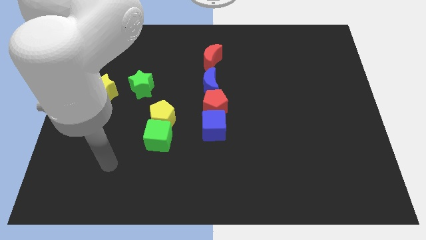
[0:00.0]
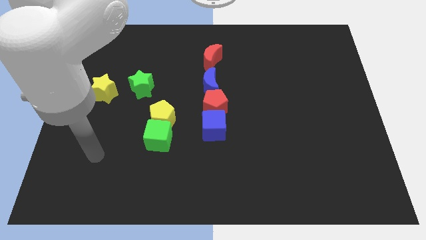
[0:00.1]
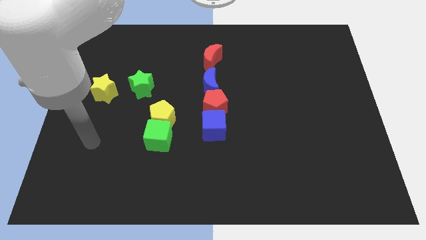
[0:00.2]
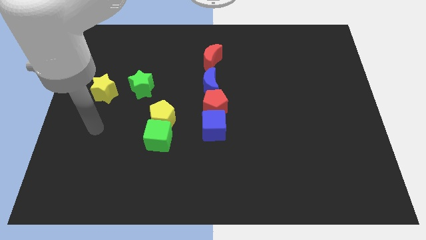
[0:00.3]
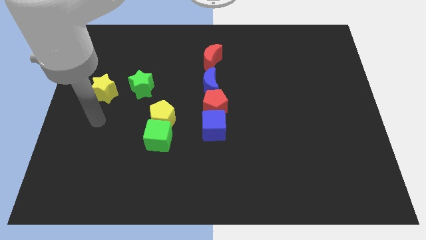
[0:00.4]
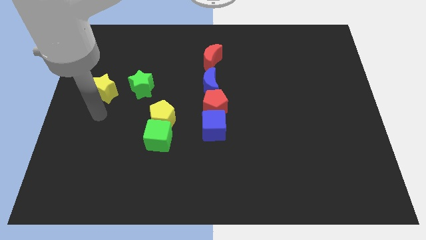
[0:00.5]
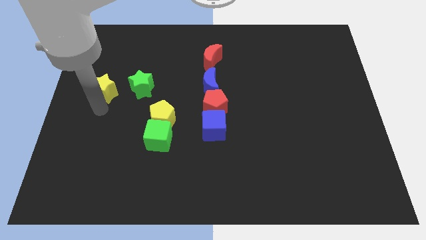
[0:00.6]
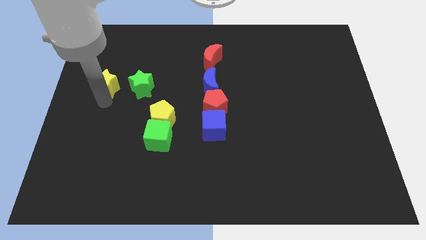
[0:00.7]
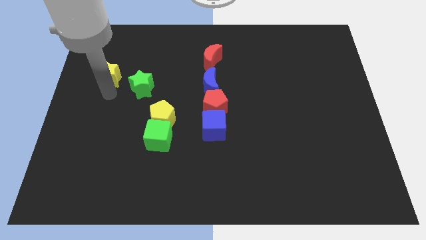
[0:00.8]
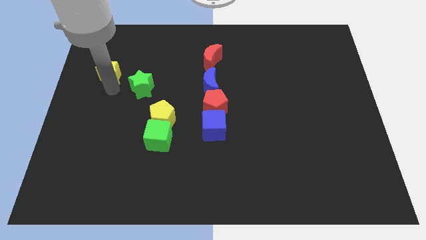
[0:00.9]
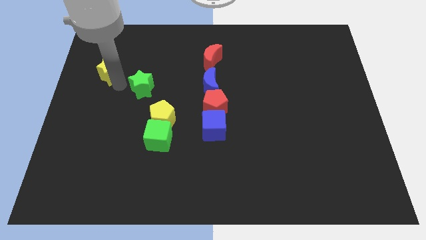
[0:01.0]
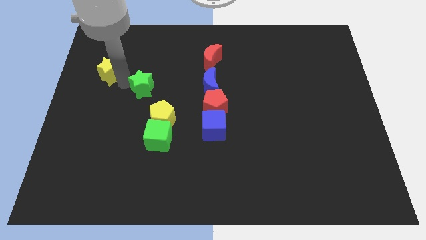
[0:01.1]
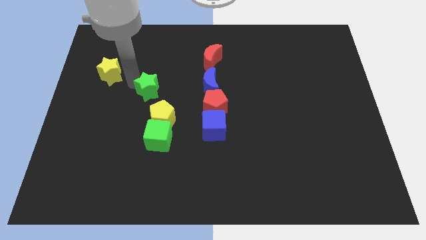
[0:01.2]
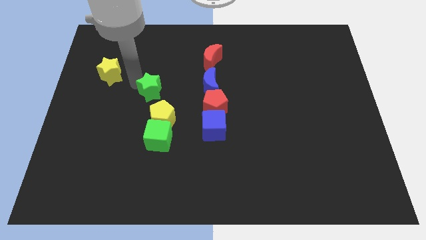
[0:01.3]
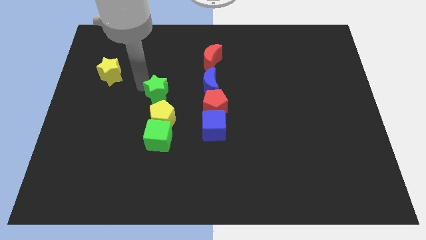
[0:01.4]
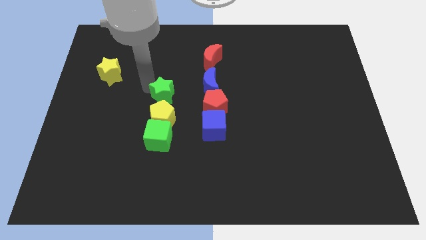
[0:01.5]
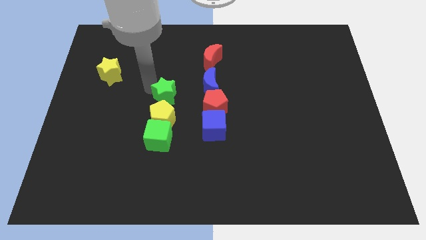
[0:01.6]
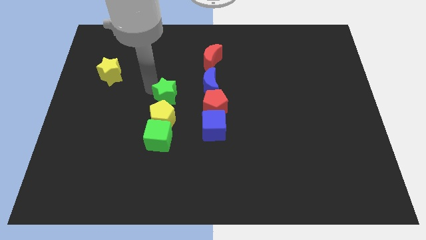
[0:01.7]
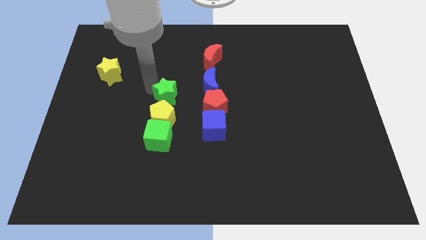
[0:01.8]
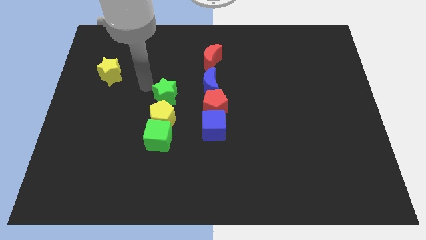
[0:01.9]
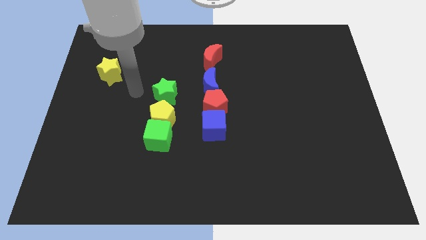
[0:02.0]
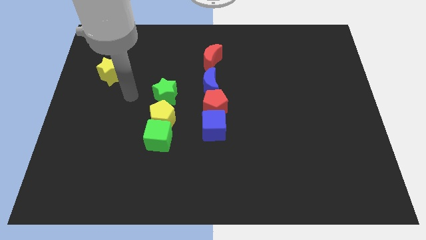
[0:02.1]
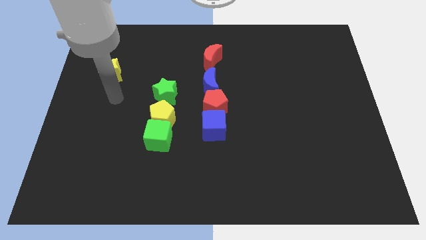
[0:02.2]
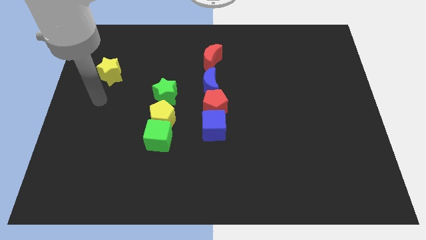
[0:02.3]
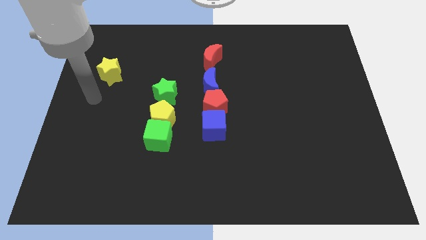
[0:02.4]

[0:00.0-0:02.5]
place the green star above the yellow pentagon

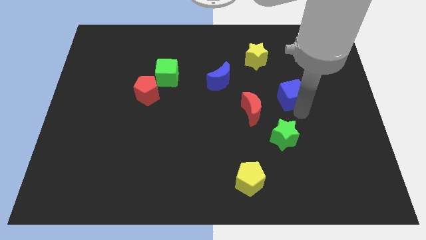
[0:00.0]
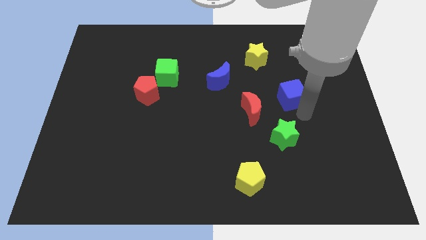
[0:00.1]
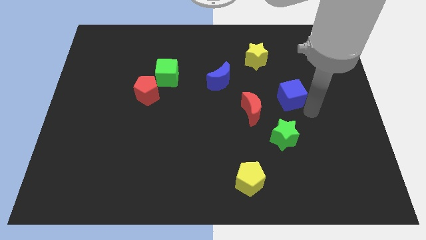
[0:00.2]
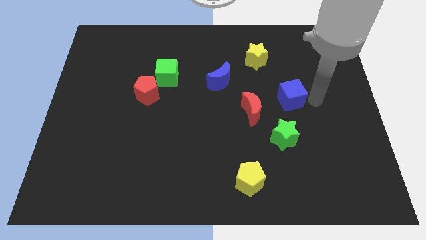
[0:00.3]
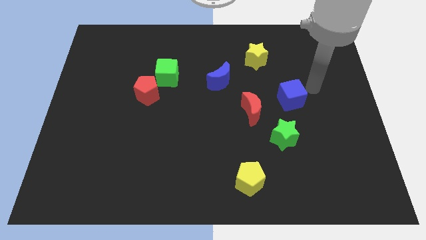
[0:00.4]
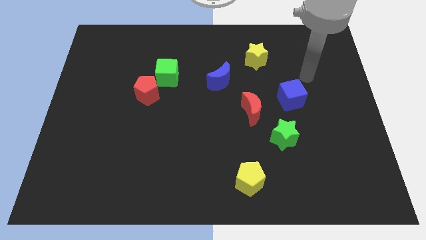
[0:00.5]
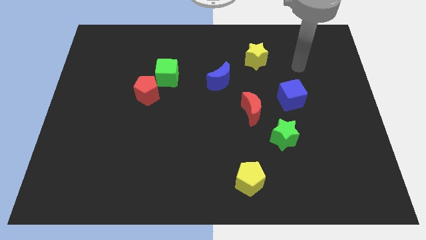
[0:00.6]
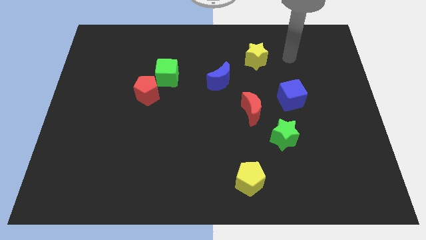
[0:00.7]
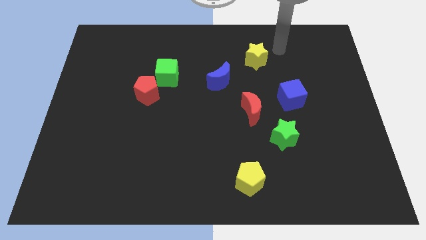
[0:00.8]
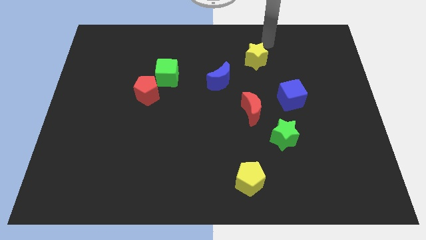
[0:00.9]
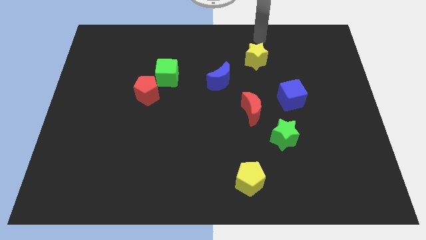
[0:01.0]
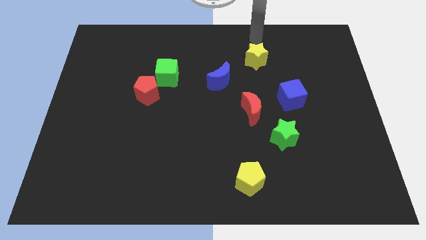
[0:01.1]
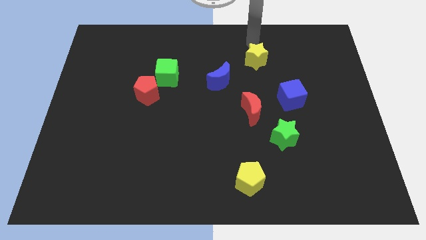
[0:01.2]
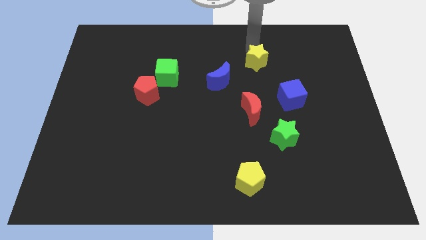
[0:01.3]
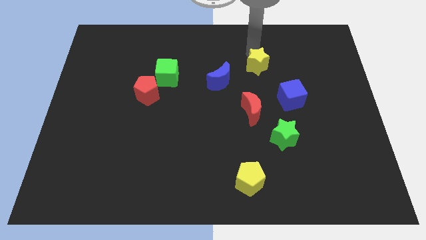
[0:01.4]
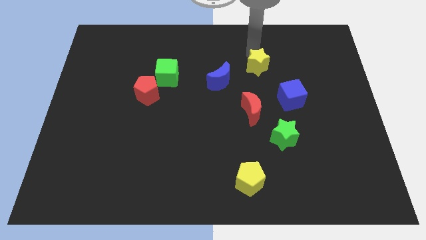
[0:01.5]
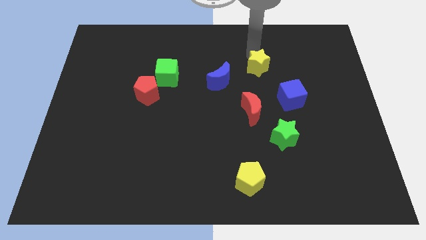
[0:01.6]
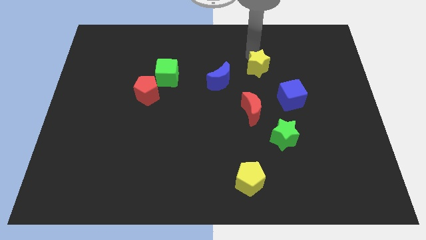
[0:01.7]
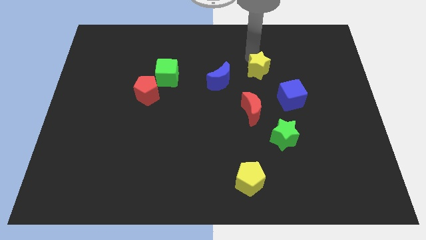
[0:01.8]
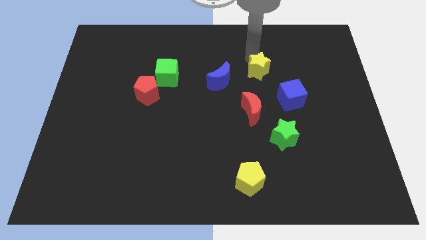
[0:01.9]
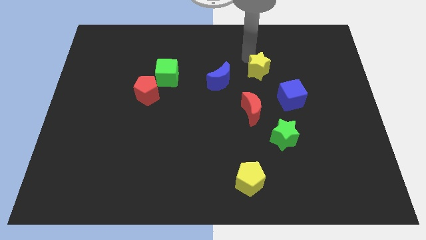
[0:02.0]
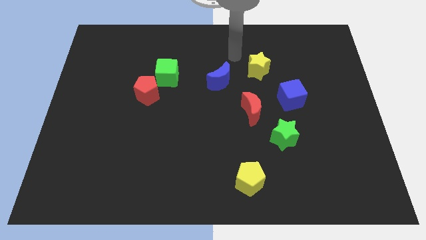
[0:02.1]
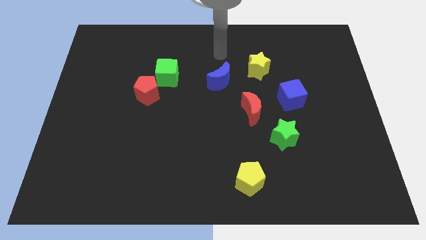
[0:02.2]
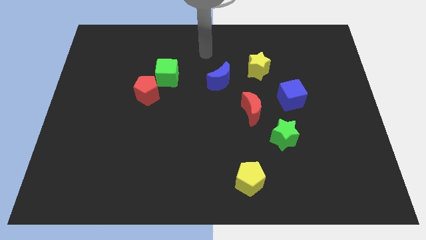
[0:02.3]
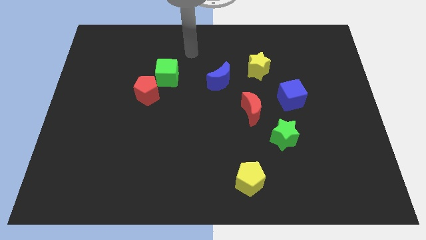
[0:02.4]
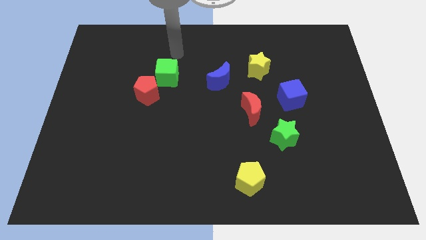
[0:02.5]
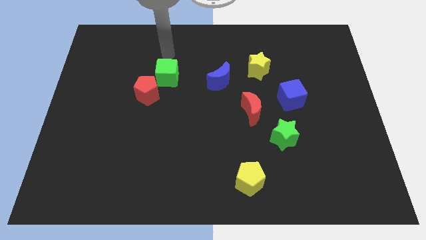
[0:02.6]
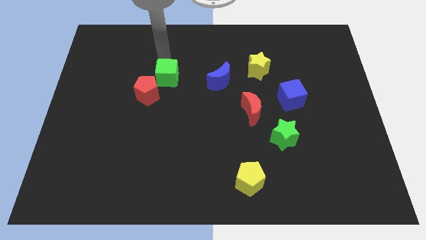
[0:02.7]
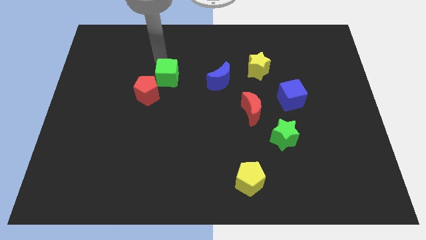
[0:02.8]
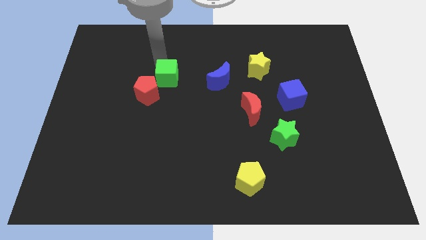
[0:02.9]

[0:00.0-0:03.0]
move the yellow star slightly towards the red moon

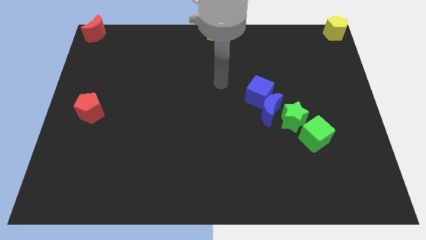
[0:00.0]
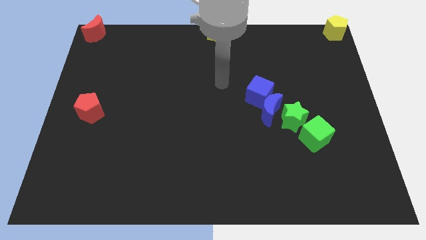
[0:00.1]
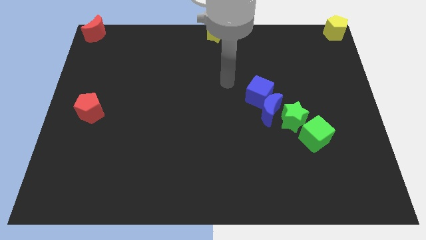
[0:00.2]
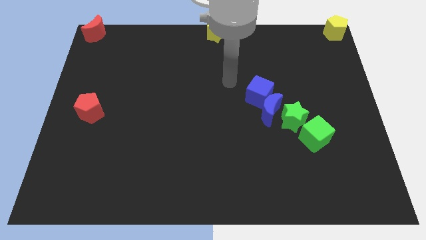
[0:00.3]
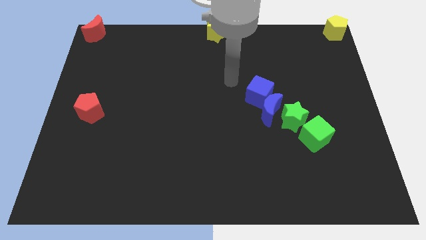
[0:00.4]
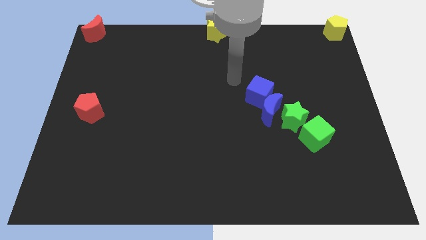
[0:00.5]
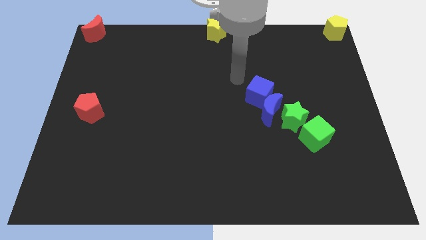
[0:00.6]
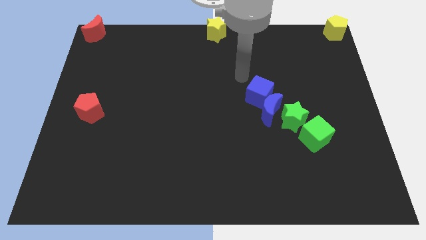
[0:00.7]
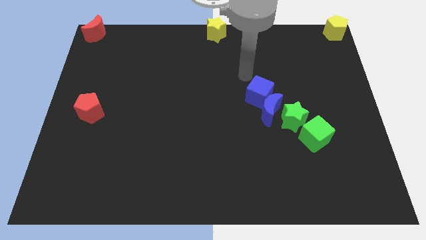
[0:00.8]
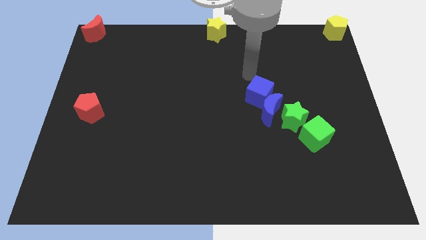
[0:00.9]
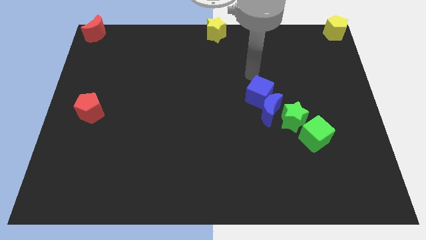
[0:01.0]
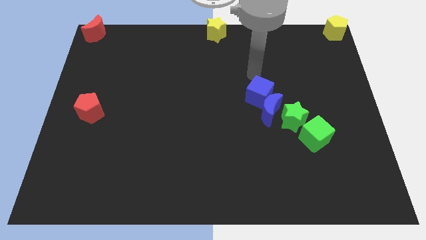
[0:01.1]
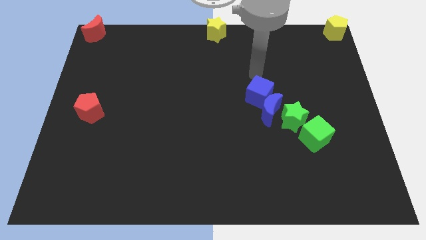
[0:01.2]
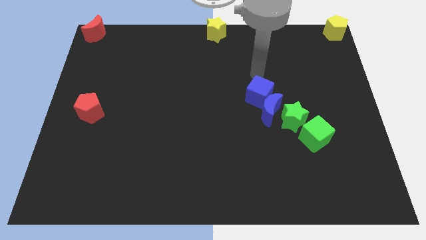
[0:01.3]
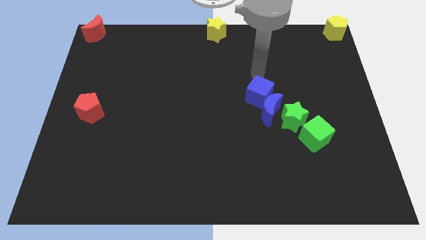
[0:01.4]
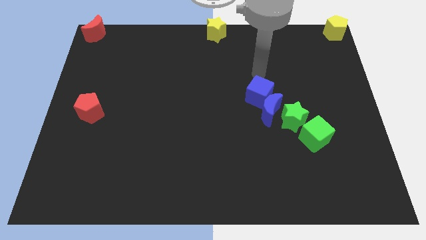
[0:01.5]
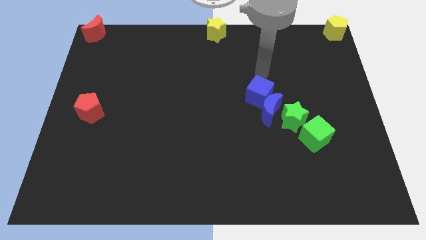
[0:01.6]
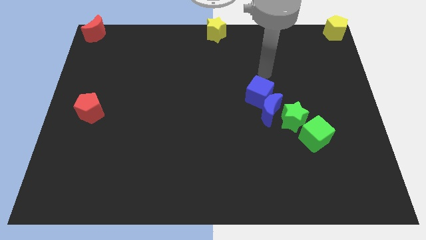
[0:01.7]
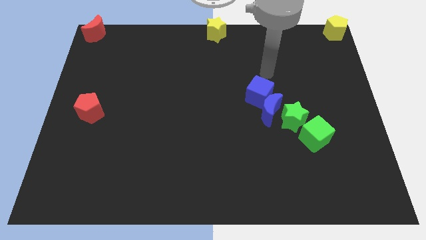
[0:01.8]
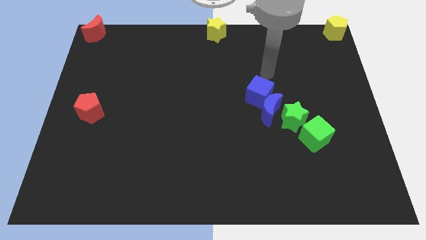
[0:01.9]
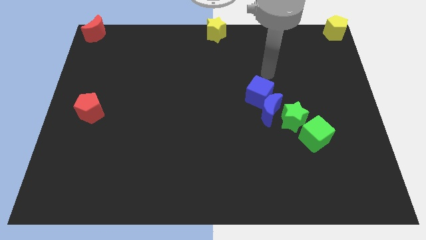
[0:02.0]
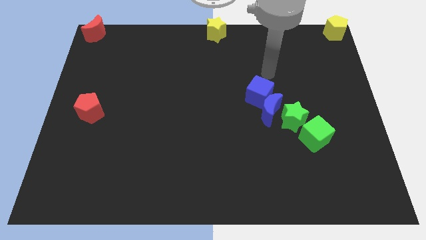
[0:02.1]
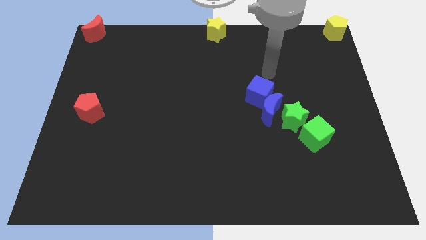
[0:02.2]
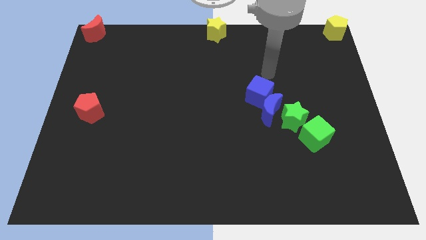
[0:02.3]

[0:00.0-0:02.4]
move your arm towards the blue cube

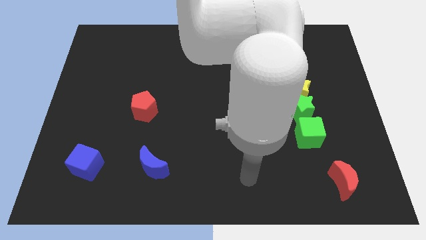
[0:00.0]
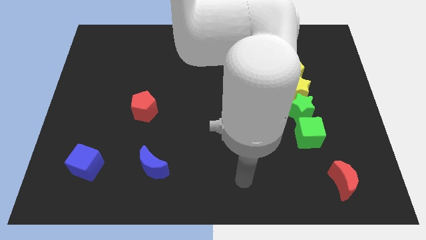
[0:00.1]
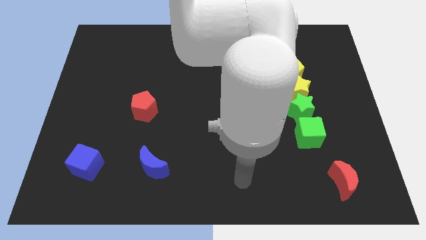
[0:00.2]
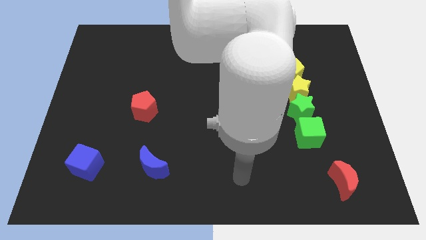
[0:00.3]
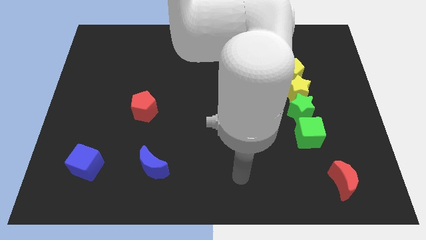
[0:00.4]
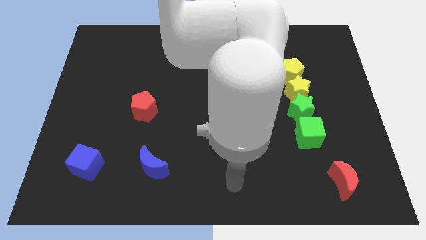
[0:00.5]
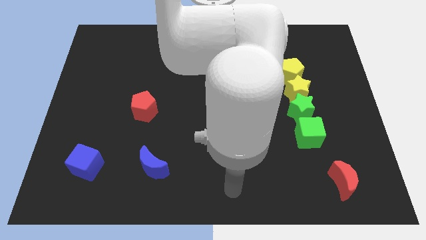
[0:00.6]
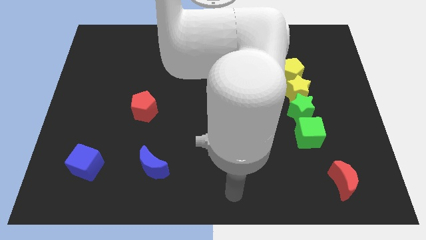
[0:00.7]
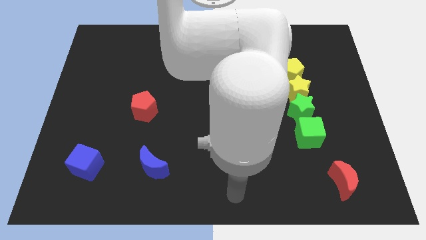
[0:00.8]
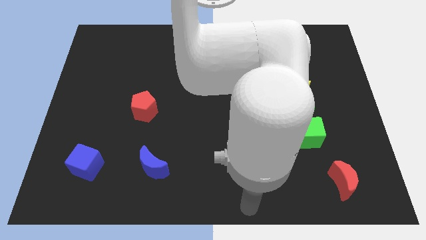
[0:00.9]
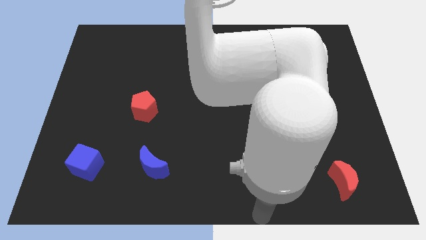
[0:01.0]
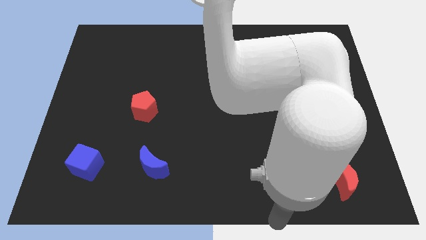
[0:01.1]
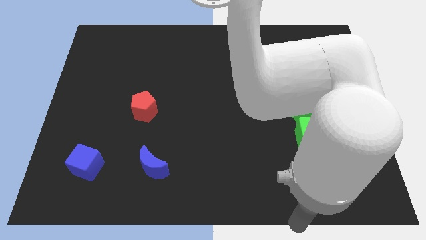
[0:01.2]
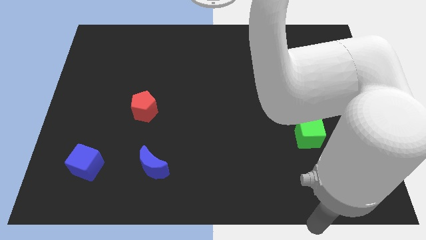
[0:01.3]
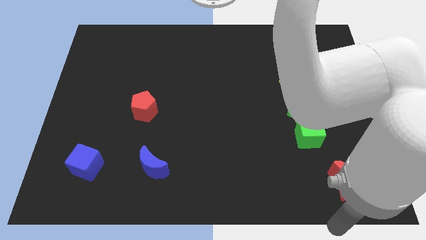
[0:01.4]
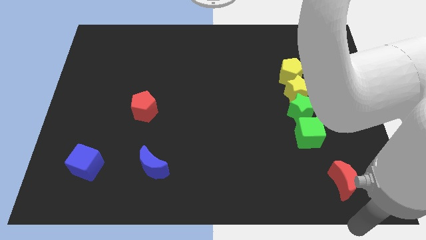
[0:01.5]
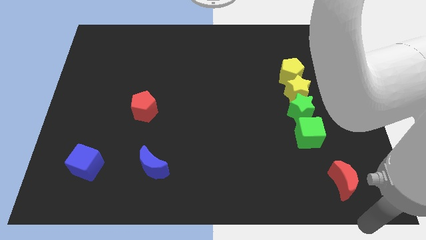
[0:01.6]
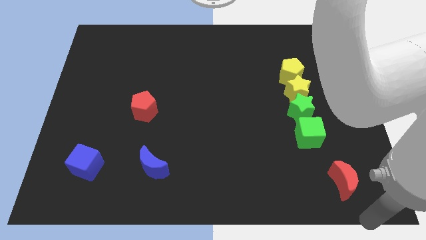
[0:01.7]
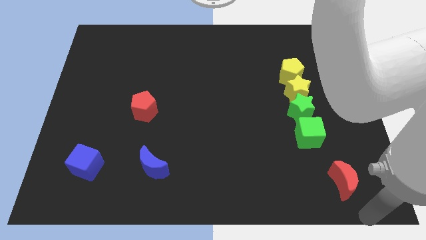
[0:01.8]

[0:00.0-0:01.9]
move your arm towards the bottom of the red crescent
